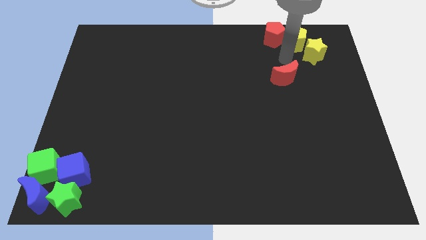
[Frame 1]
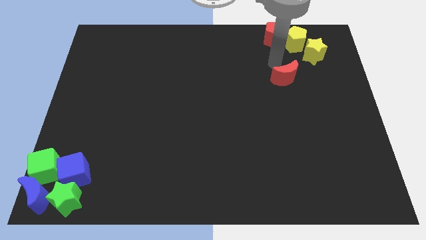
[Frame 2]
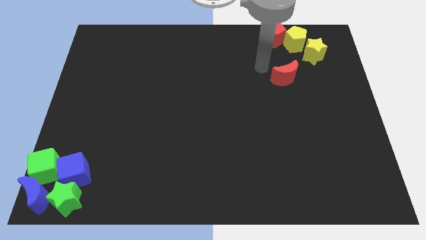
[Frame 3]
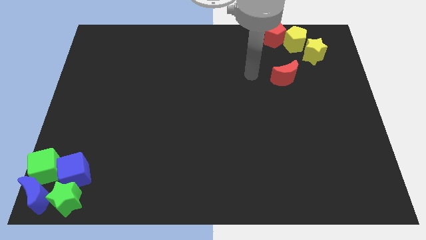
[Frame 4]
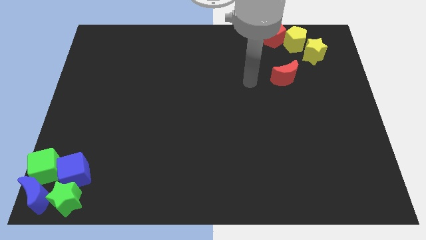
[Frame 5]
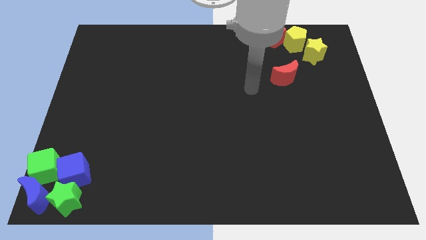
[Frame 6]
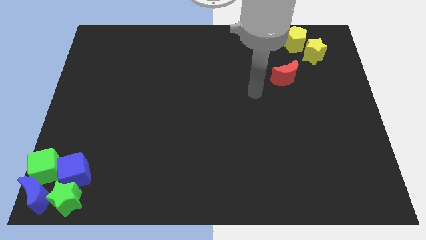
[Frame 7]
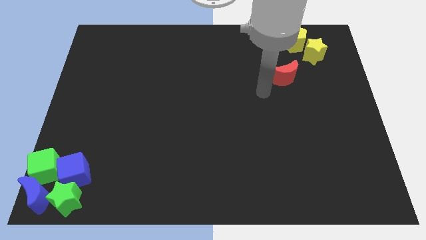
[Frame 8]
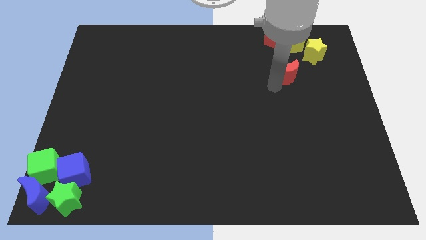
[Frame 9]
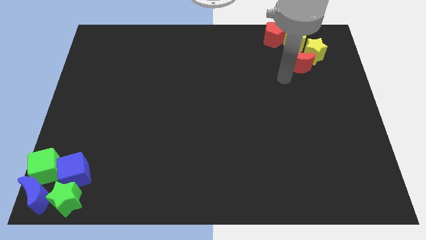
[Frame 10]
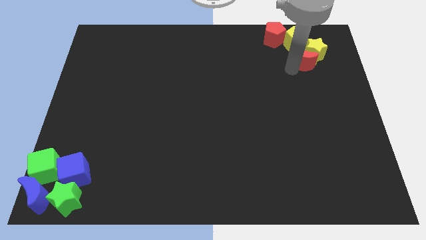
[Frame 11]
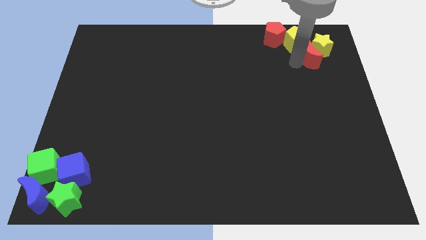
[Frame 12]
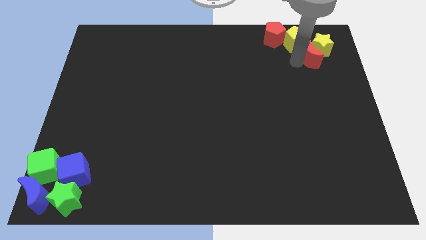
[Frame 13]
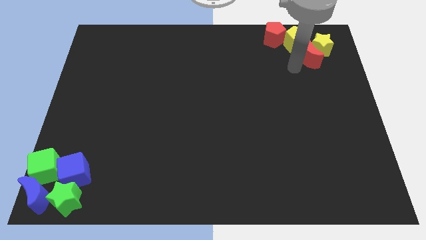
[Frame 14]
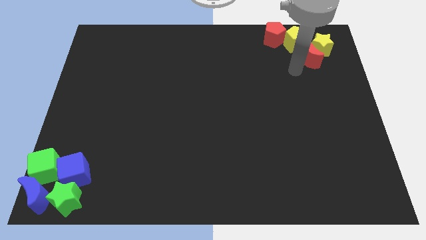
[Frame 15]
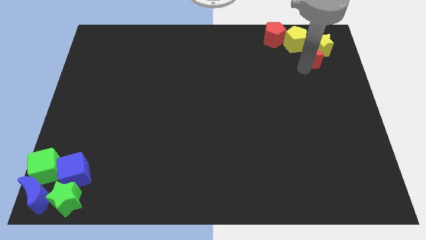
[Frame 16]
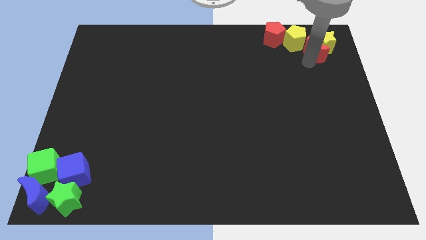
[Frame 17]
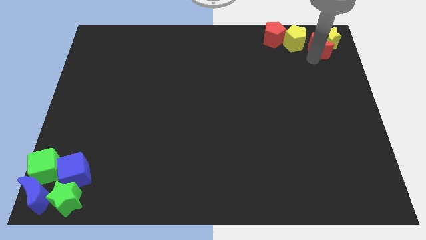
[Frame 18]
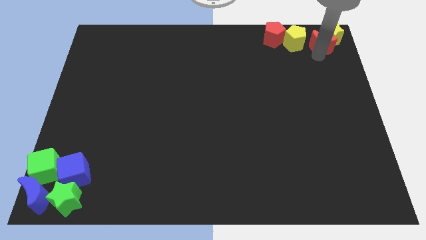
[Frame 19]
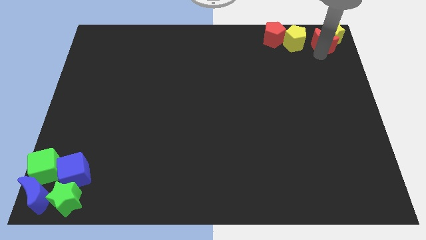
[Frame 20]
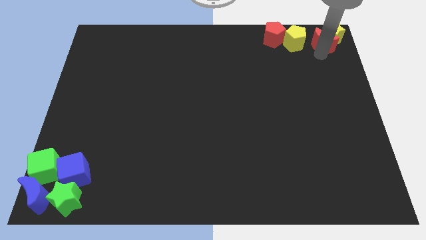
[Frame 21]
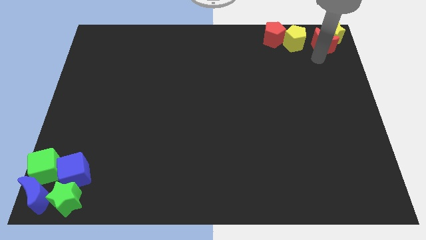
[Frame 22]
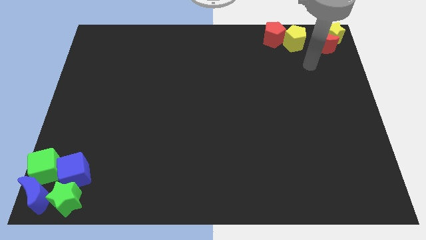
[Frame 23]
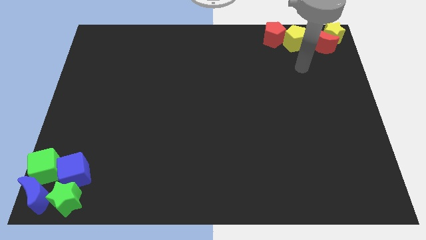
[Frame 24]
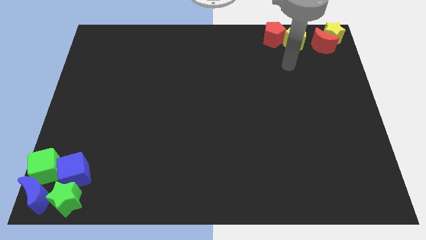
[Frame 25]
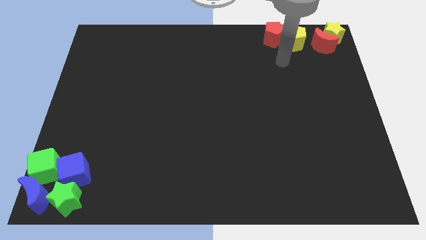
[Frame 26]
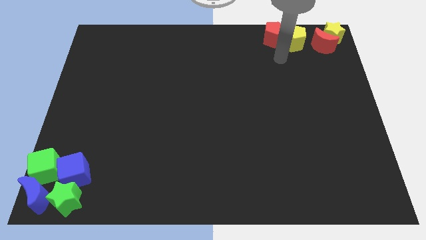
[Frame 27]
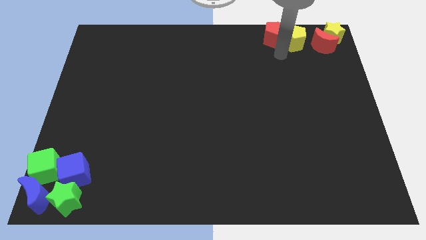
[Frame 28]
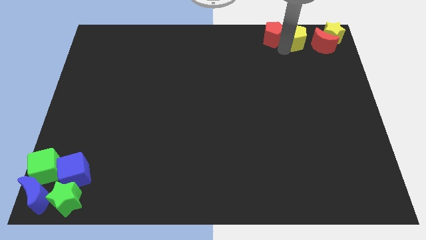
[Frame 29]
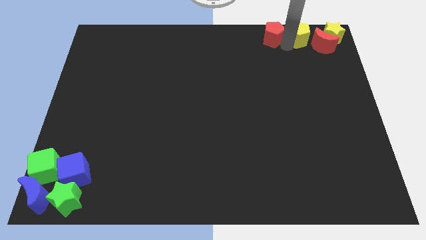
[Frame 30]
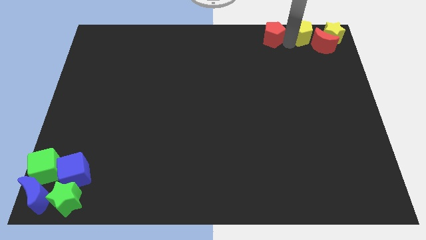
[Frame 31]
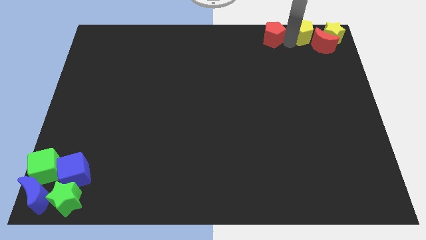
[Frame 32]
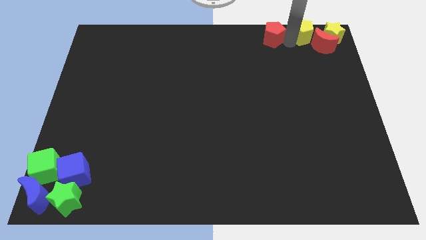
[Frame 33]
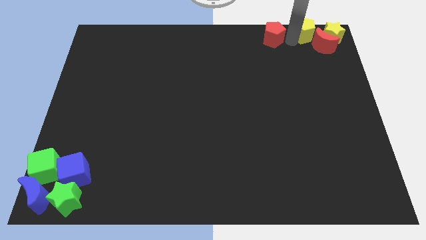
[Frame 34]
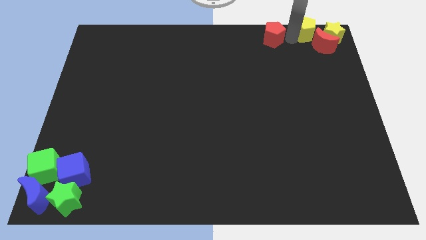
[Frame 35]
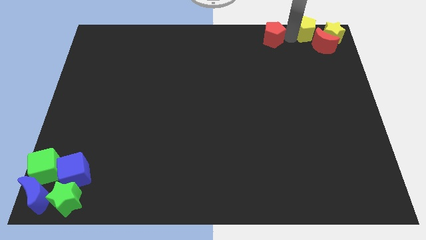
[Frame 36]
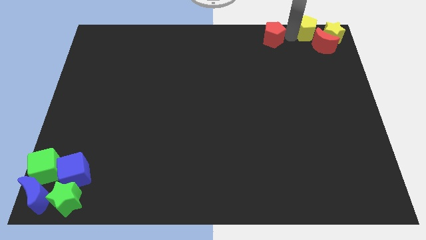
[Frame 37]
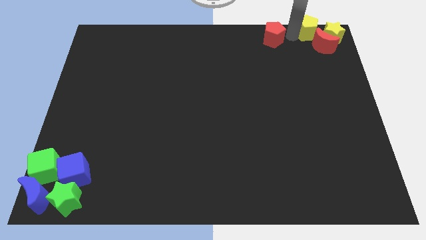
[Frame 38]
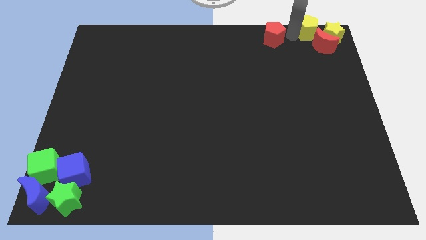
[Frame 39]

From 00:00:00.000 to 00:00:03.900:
push yellow star along with red moon to the top right corner

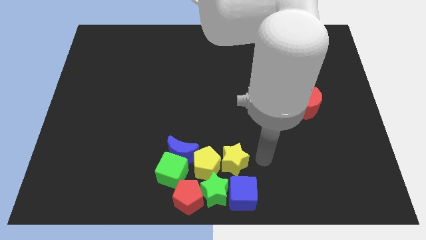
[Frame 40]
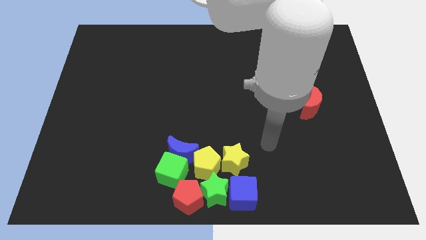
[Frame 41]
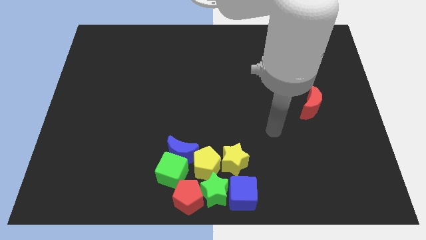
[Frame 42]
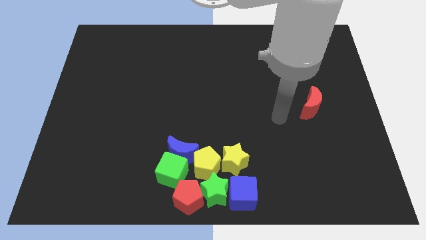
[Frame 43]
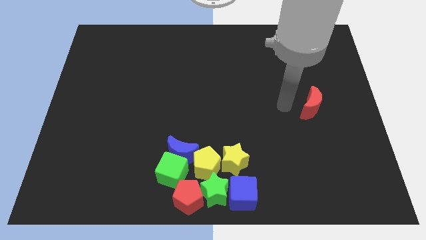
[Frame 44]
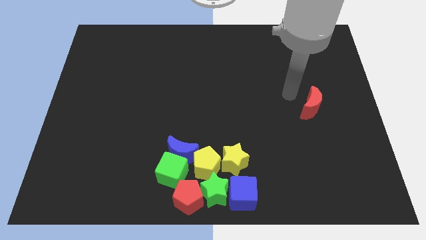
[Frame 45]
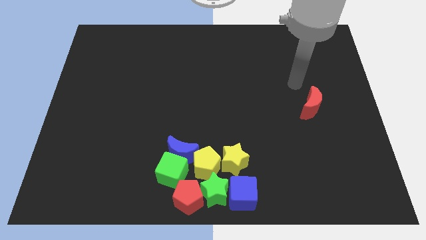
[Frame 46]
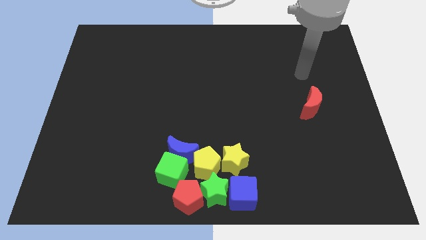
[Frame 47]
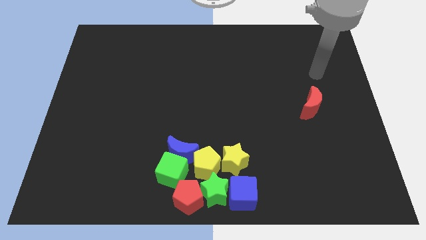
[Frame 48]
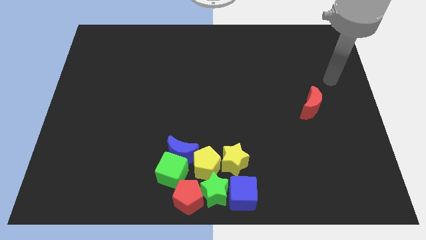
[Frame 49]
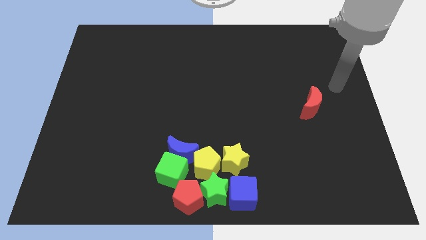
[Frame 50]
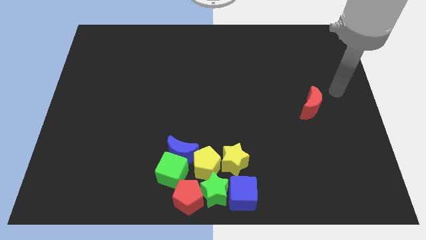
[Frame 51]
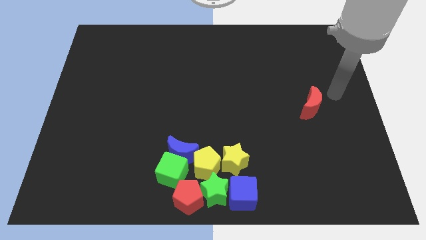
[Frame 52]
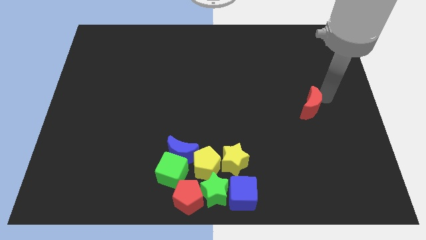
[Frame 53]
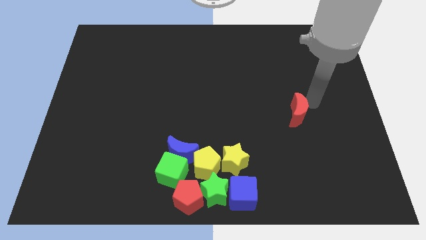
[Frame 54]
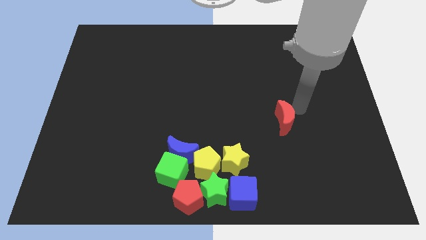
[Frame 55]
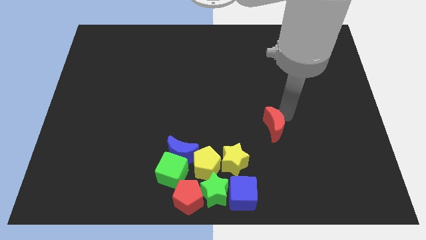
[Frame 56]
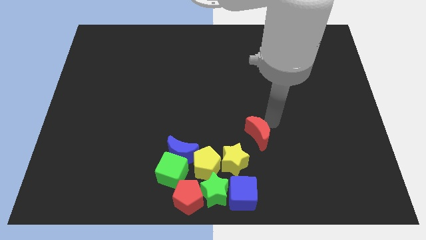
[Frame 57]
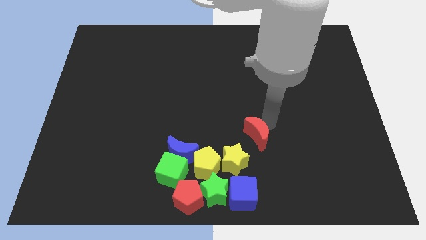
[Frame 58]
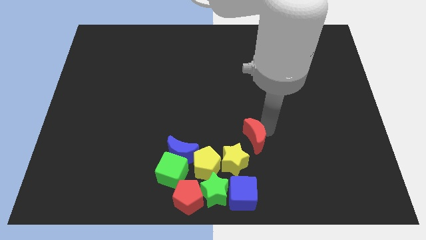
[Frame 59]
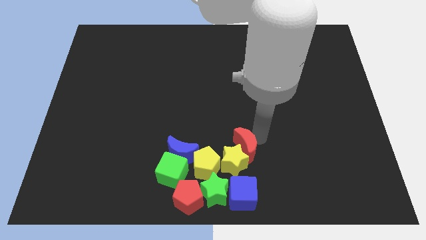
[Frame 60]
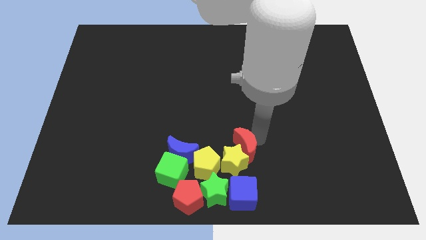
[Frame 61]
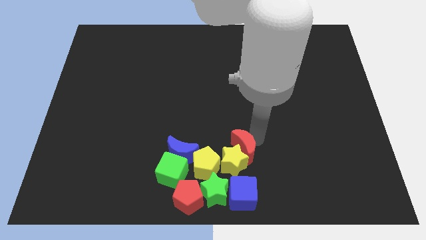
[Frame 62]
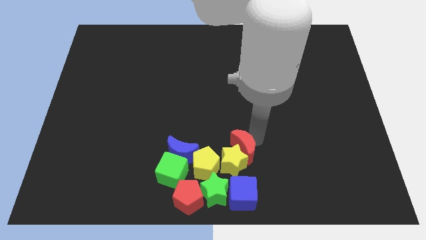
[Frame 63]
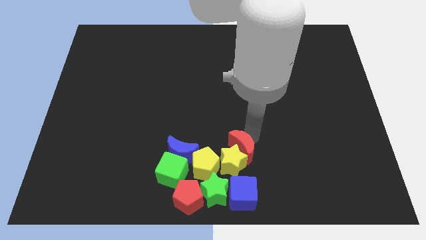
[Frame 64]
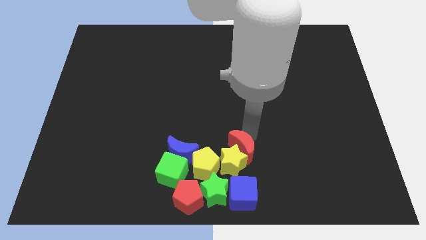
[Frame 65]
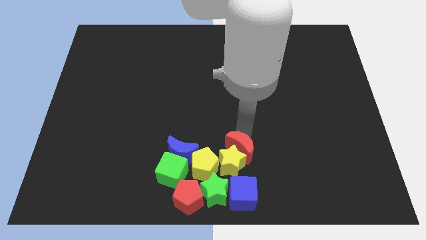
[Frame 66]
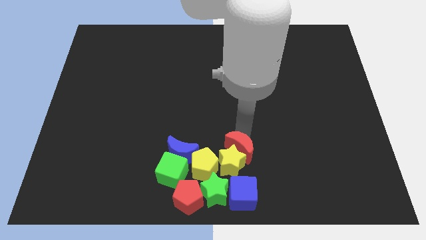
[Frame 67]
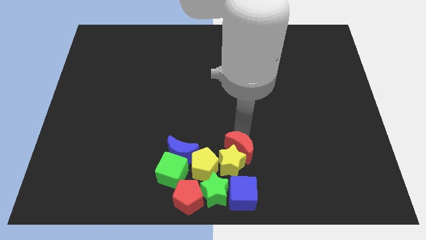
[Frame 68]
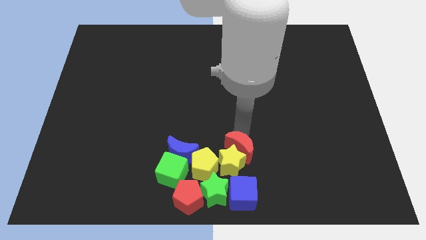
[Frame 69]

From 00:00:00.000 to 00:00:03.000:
push the red moon into yellow star

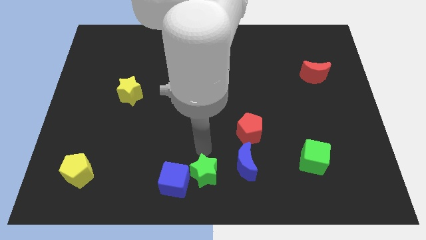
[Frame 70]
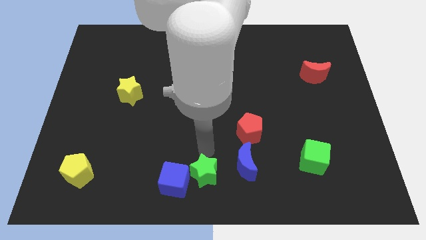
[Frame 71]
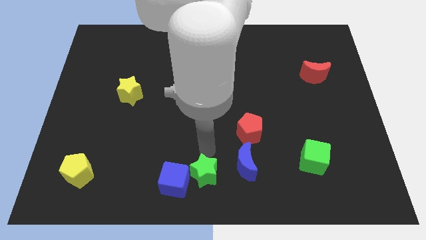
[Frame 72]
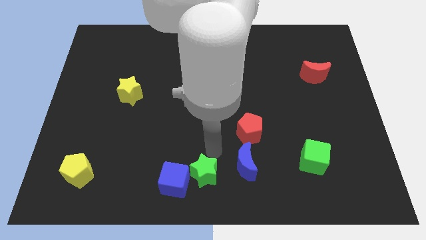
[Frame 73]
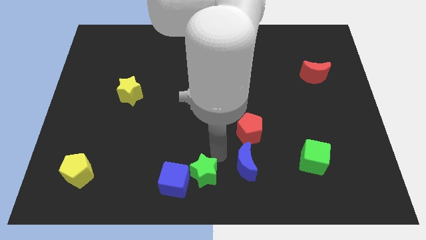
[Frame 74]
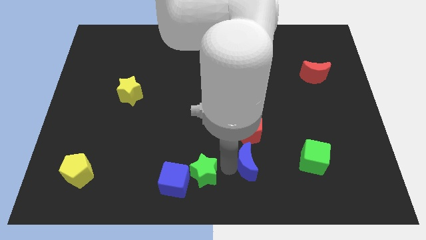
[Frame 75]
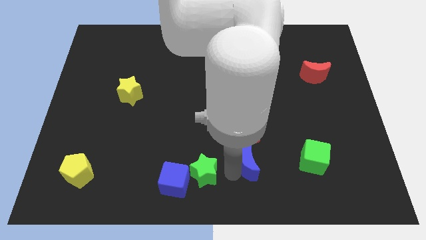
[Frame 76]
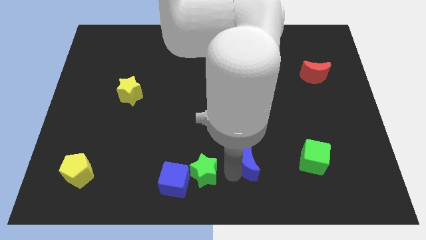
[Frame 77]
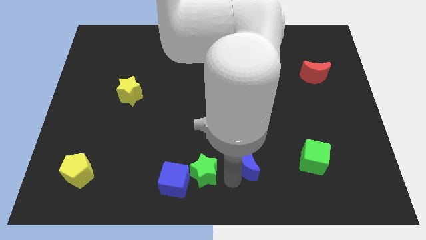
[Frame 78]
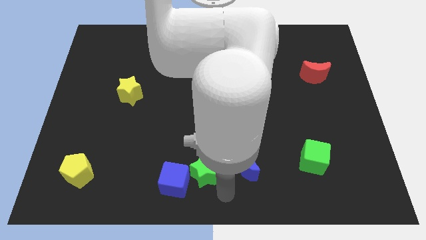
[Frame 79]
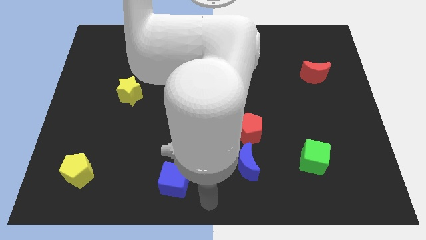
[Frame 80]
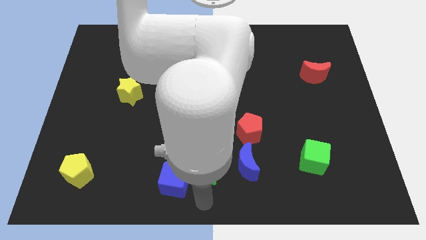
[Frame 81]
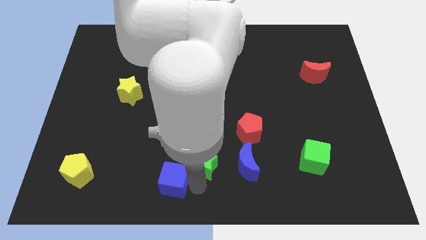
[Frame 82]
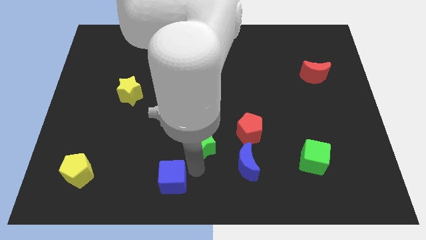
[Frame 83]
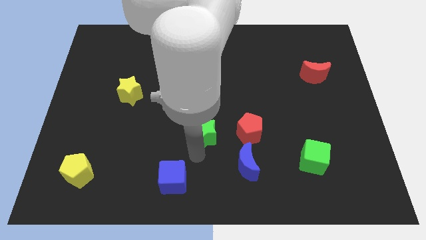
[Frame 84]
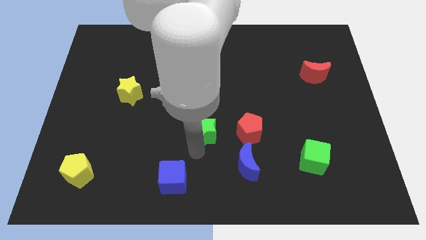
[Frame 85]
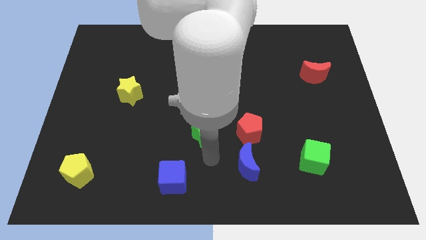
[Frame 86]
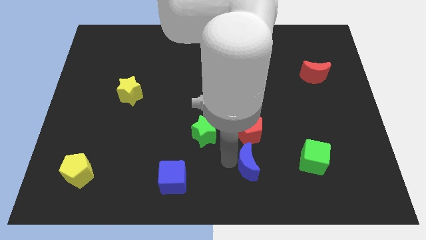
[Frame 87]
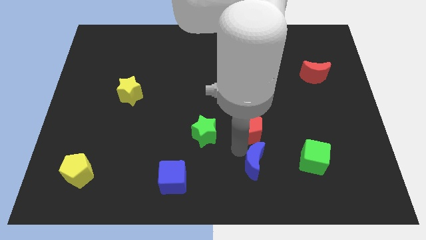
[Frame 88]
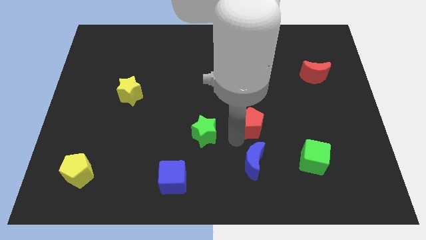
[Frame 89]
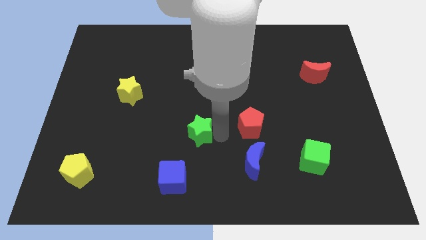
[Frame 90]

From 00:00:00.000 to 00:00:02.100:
slightly move green star to the top
